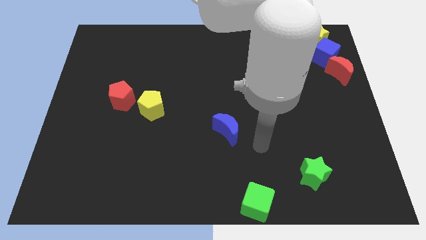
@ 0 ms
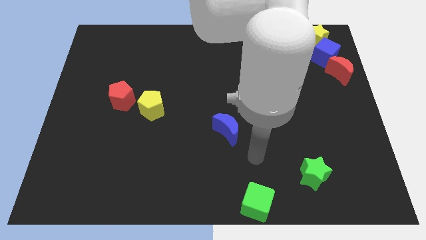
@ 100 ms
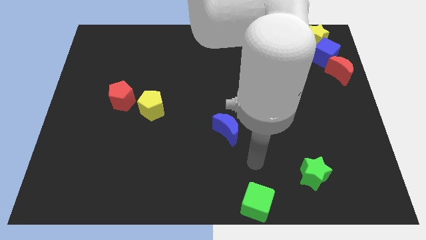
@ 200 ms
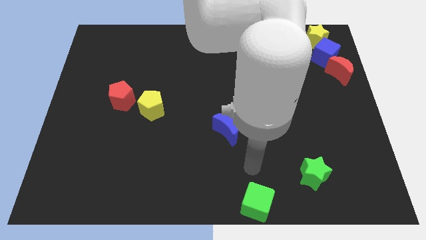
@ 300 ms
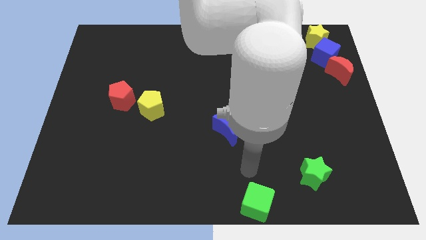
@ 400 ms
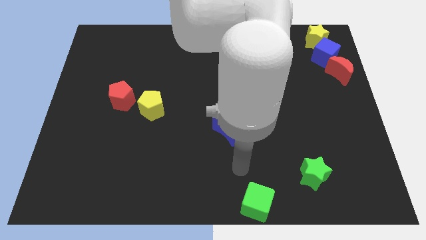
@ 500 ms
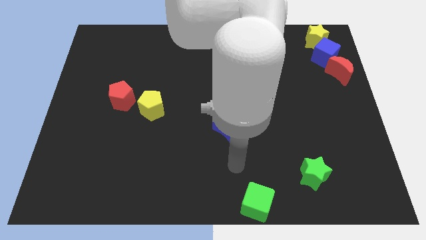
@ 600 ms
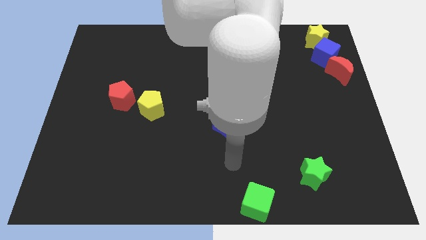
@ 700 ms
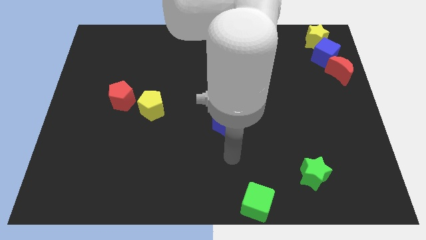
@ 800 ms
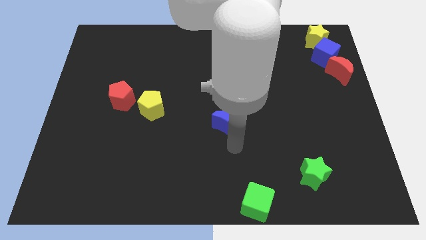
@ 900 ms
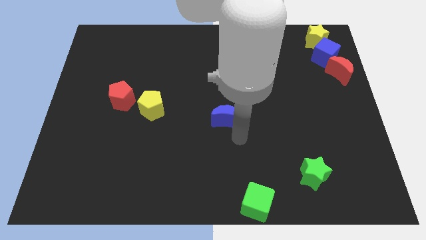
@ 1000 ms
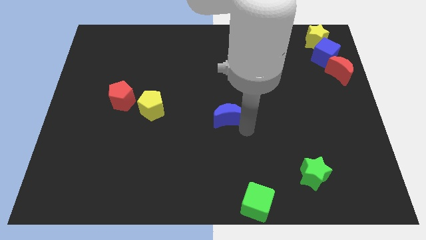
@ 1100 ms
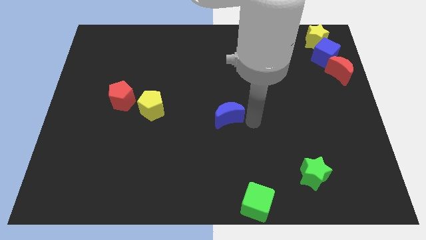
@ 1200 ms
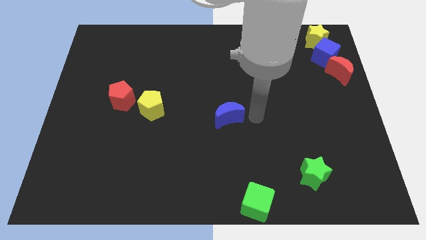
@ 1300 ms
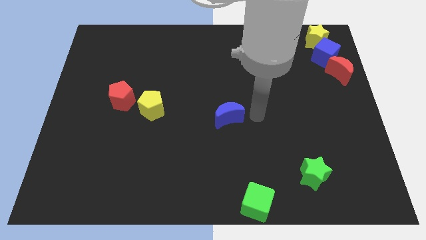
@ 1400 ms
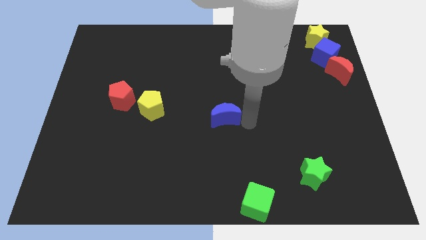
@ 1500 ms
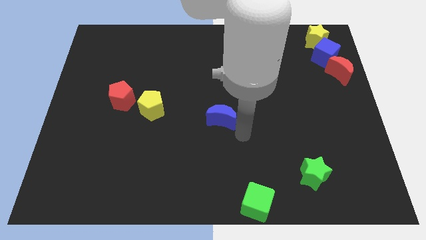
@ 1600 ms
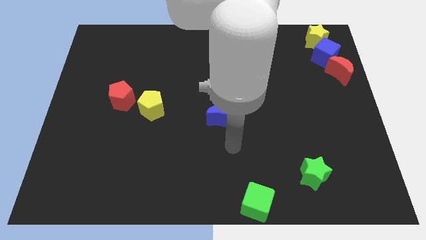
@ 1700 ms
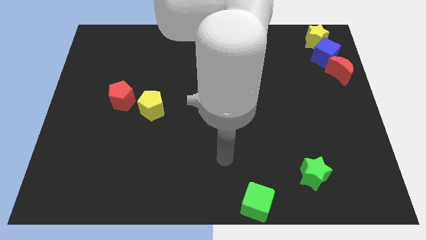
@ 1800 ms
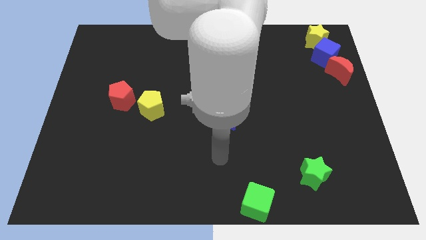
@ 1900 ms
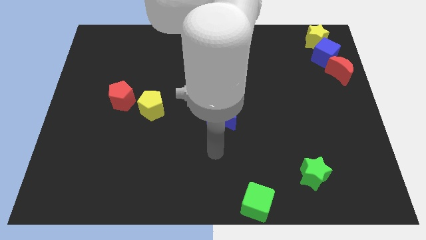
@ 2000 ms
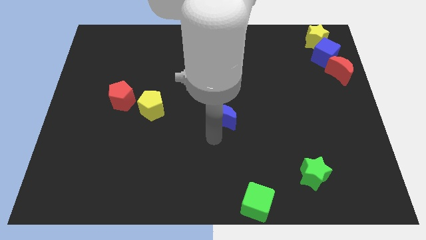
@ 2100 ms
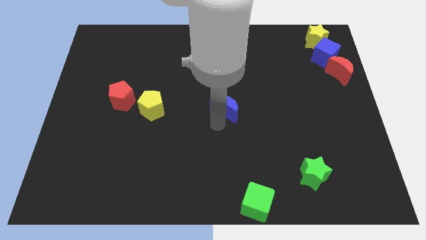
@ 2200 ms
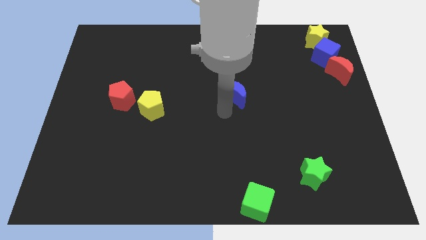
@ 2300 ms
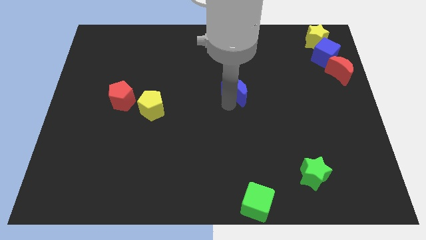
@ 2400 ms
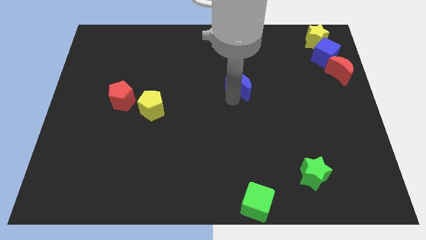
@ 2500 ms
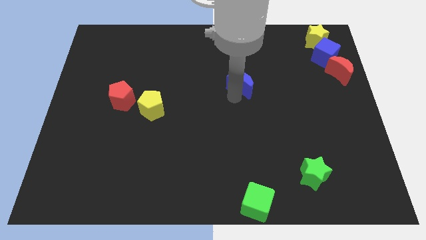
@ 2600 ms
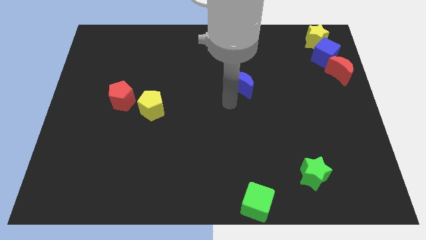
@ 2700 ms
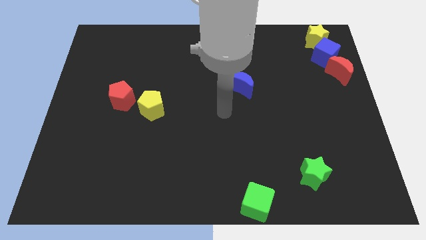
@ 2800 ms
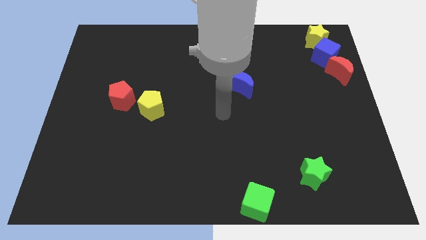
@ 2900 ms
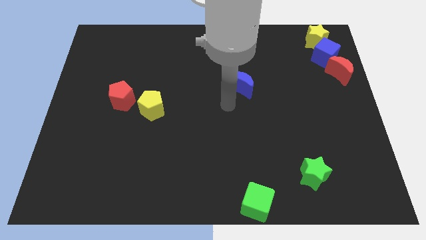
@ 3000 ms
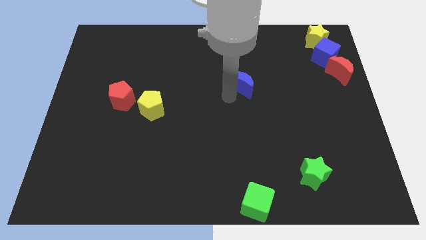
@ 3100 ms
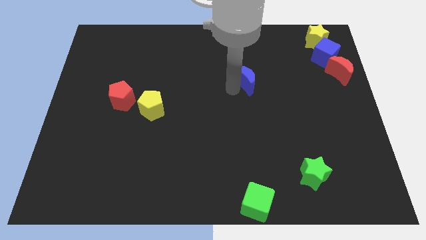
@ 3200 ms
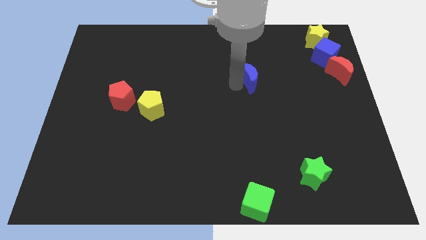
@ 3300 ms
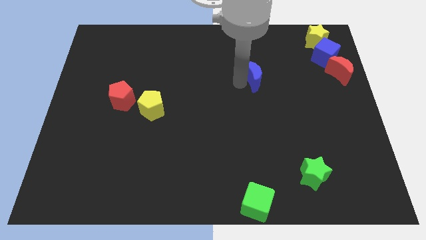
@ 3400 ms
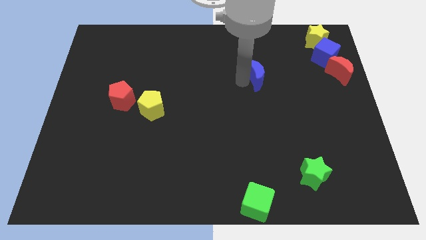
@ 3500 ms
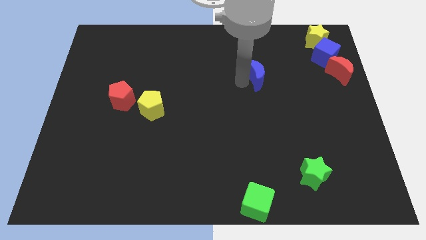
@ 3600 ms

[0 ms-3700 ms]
move the blue moon in the upward direction

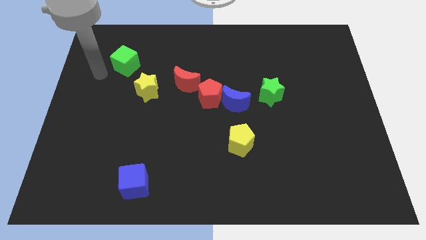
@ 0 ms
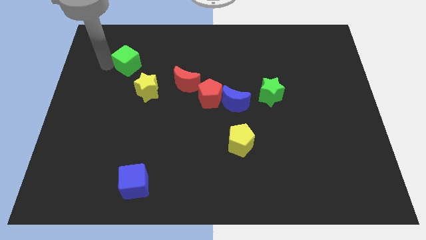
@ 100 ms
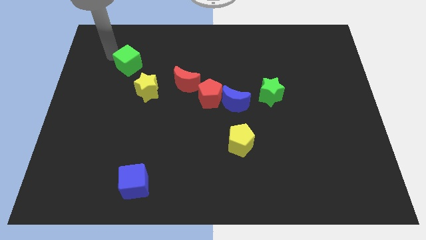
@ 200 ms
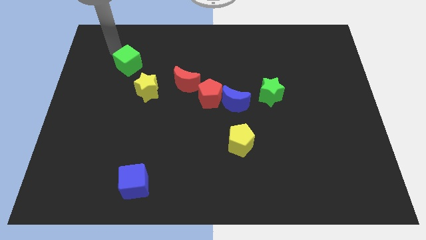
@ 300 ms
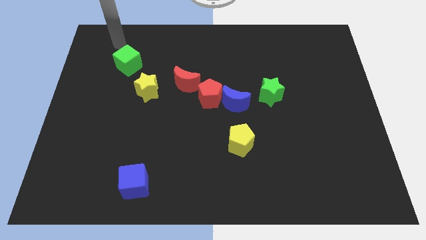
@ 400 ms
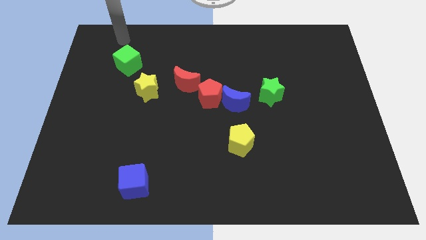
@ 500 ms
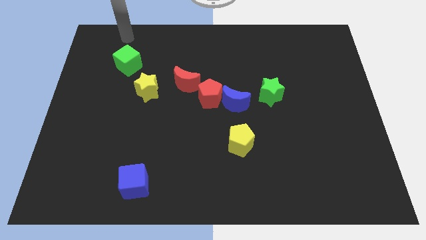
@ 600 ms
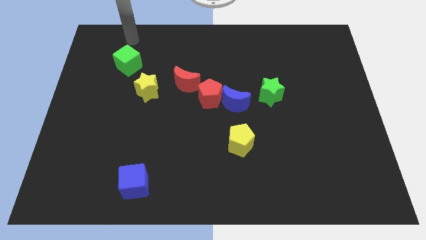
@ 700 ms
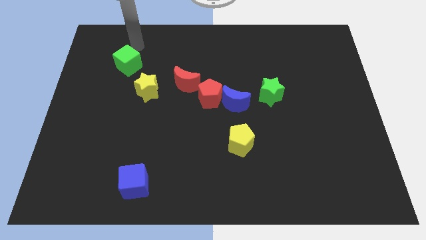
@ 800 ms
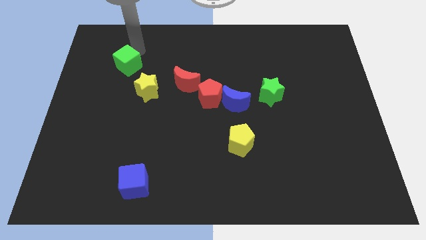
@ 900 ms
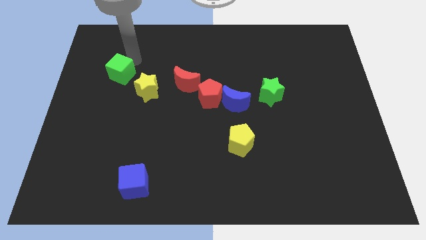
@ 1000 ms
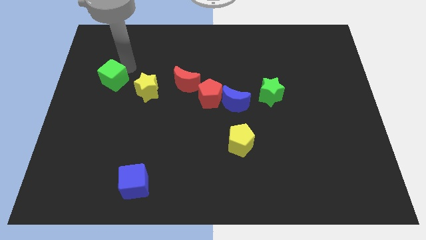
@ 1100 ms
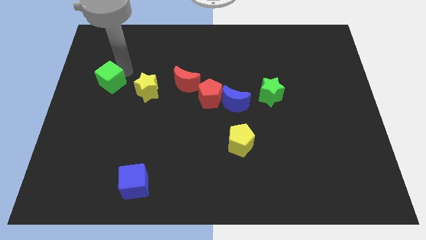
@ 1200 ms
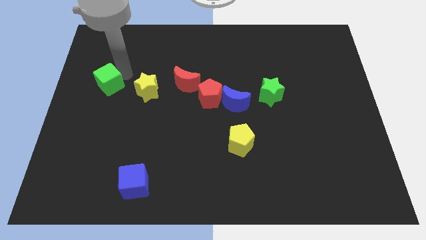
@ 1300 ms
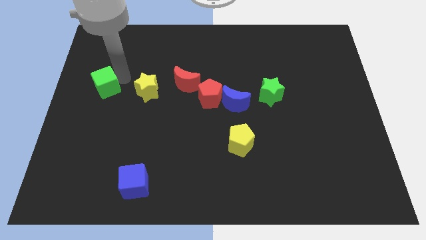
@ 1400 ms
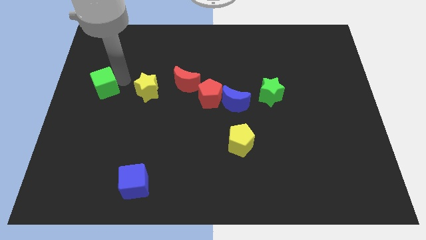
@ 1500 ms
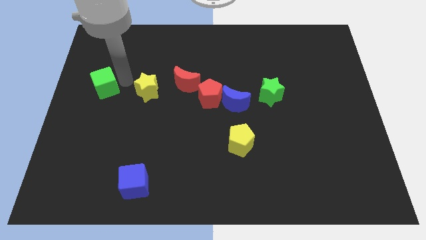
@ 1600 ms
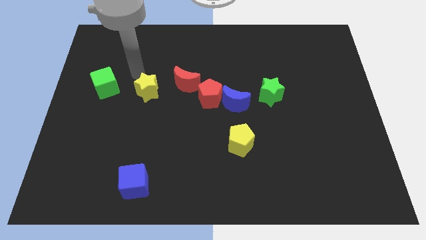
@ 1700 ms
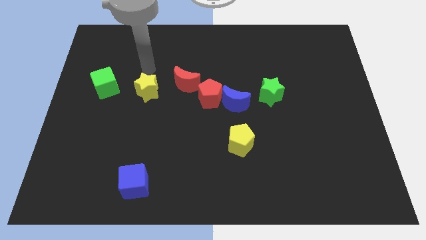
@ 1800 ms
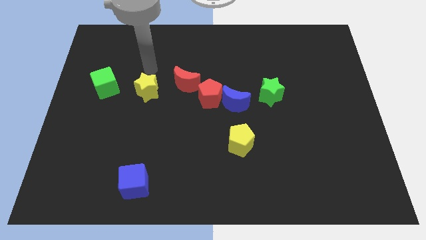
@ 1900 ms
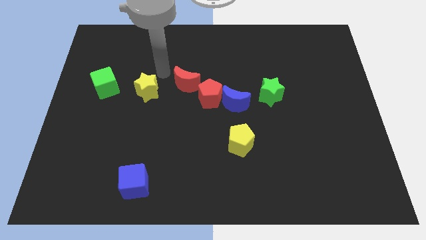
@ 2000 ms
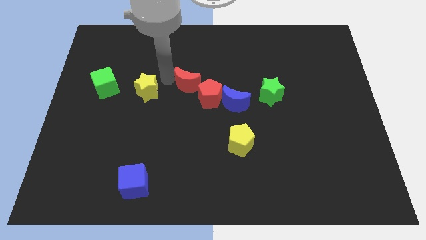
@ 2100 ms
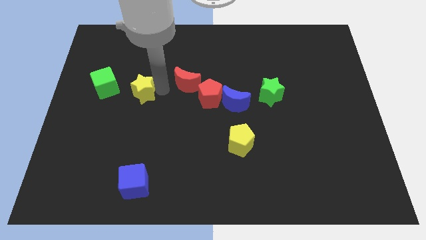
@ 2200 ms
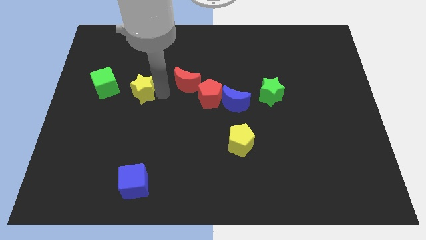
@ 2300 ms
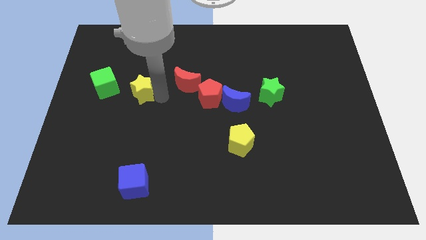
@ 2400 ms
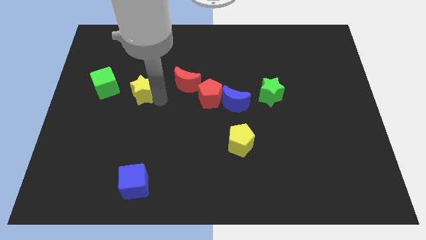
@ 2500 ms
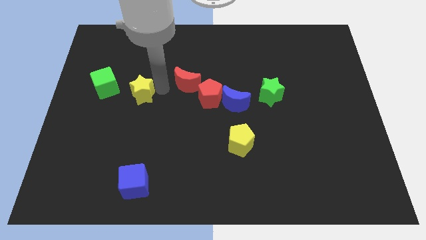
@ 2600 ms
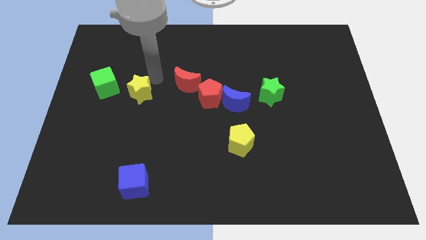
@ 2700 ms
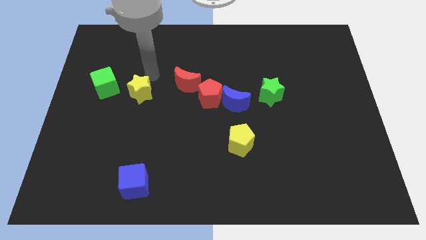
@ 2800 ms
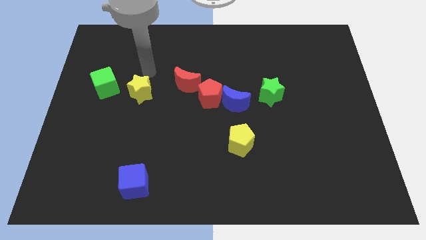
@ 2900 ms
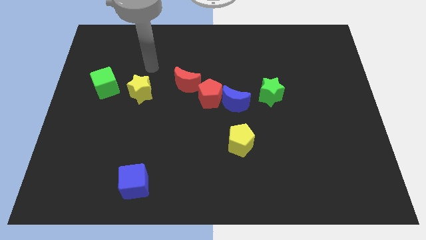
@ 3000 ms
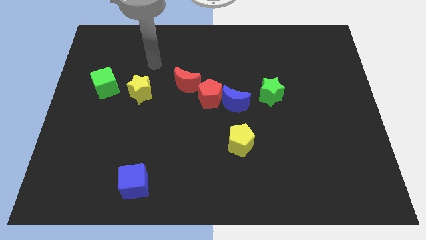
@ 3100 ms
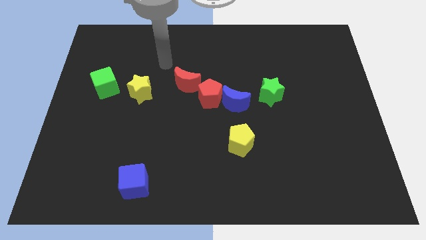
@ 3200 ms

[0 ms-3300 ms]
move the green cube to the left of the yellow star

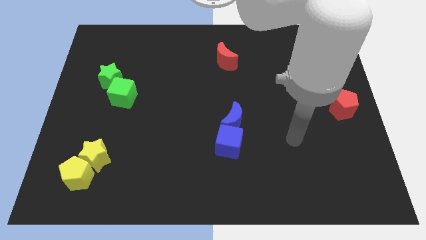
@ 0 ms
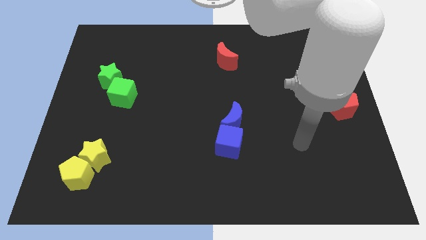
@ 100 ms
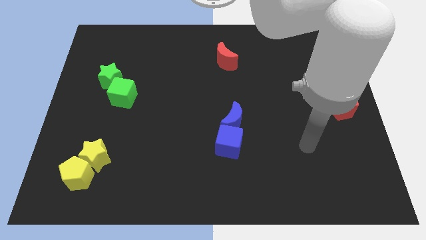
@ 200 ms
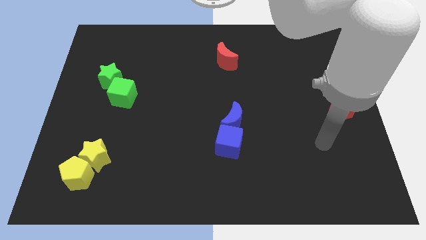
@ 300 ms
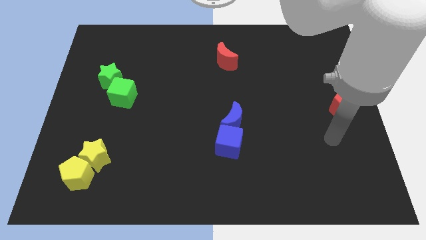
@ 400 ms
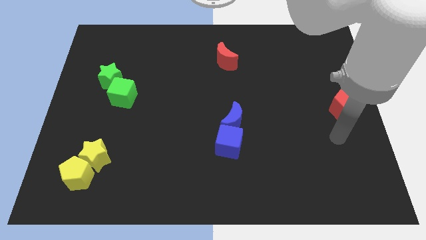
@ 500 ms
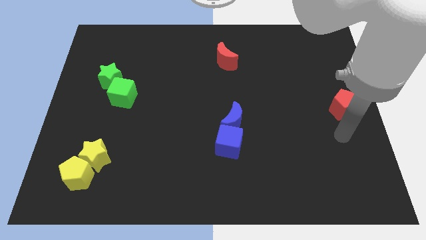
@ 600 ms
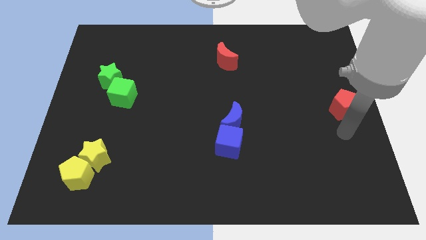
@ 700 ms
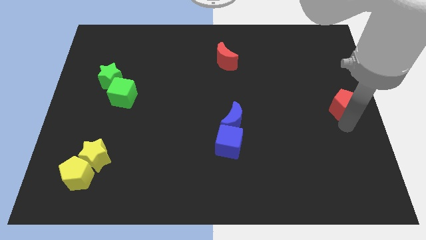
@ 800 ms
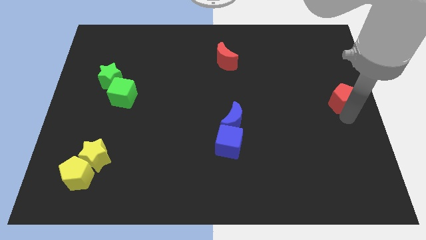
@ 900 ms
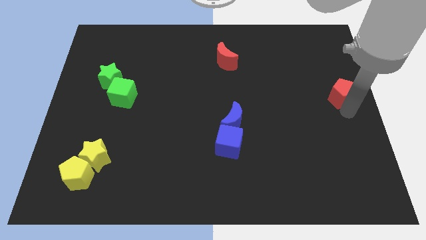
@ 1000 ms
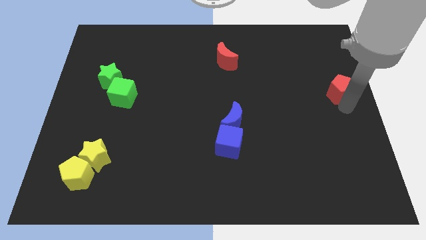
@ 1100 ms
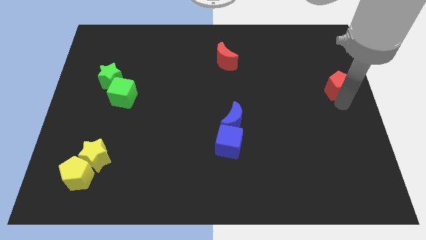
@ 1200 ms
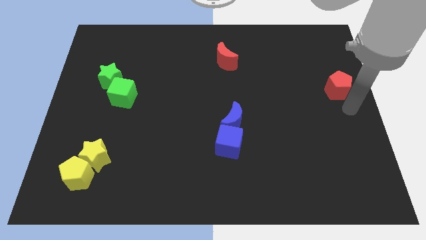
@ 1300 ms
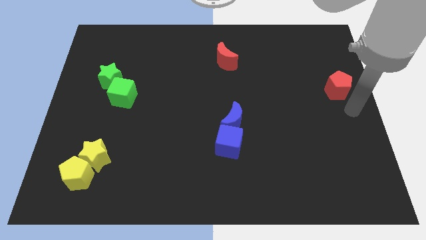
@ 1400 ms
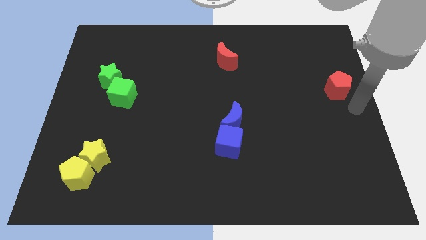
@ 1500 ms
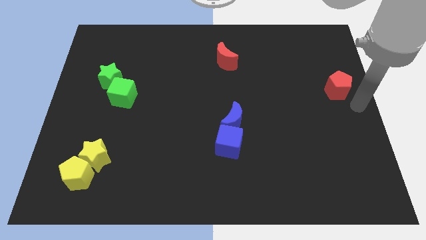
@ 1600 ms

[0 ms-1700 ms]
push the red pentagon to the top of the board

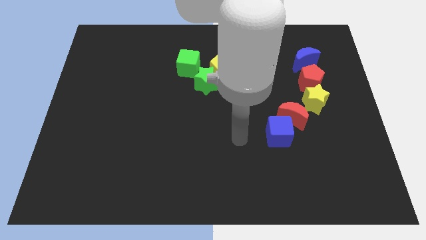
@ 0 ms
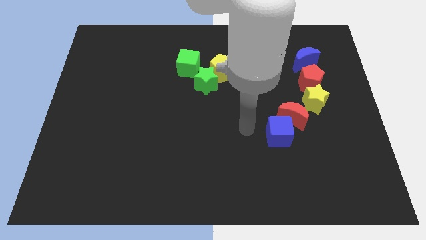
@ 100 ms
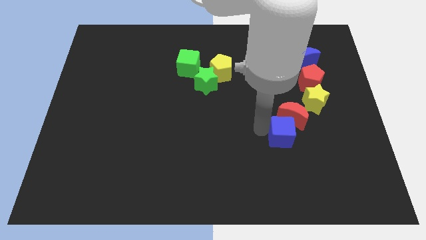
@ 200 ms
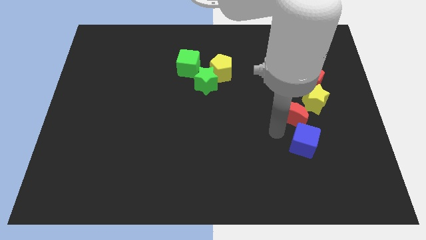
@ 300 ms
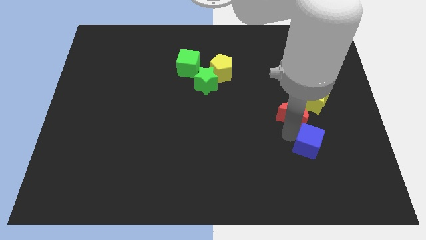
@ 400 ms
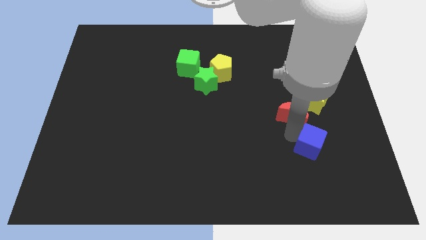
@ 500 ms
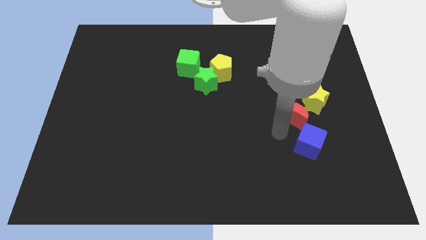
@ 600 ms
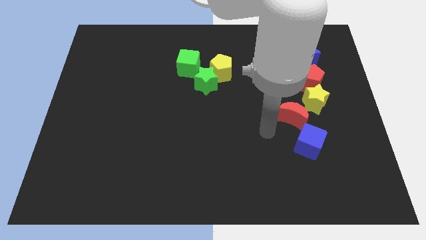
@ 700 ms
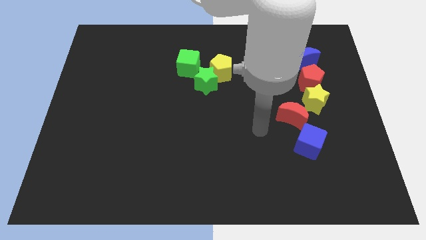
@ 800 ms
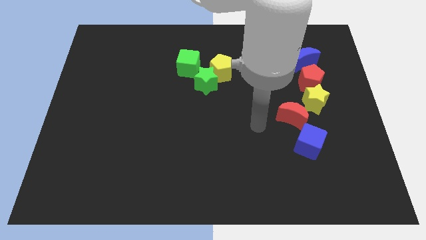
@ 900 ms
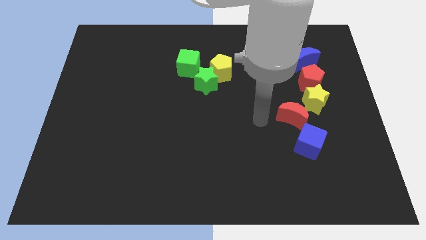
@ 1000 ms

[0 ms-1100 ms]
move blue cube to the bottom right
